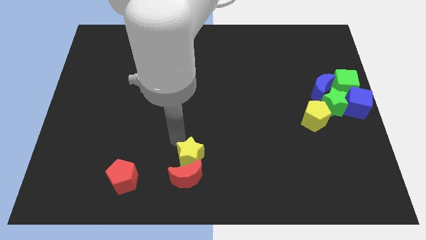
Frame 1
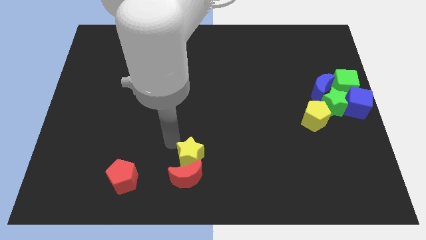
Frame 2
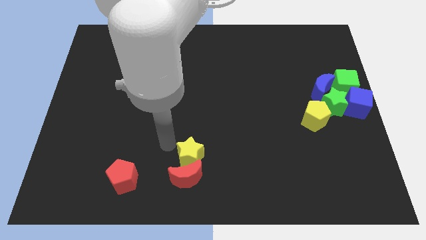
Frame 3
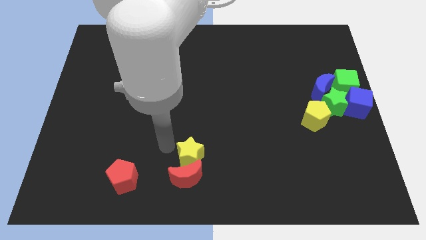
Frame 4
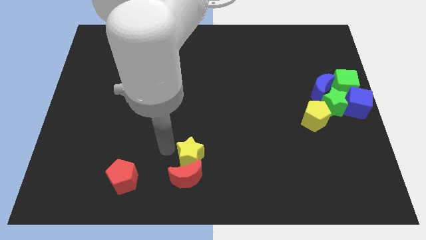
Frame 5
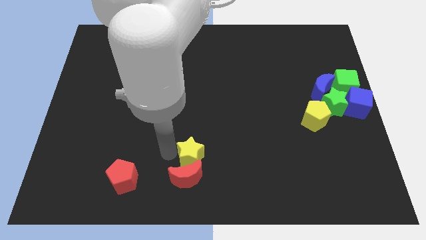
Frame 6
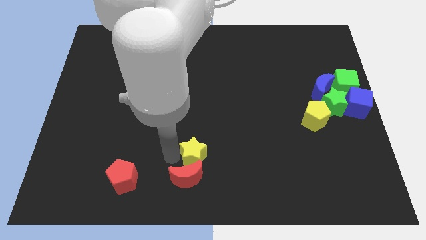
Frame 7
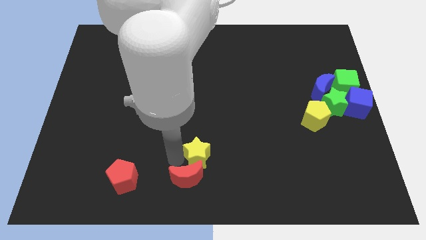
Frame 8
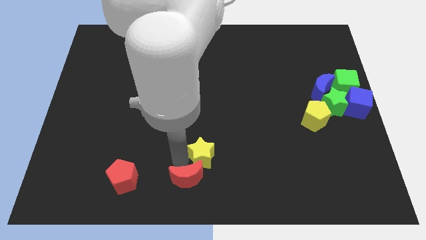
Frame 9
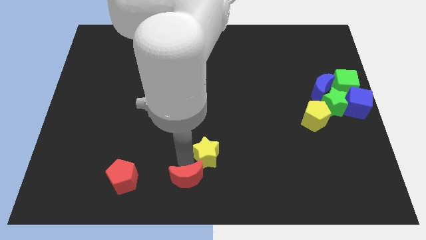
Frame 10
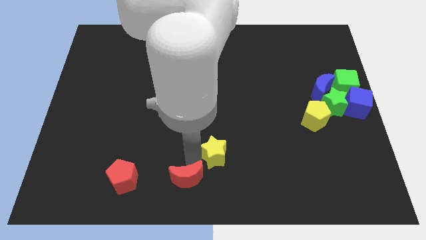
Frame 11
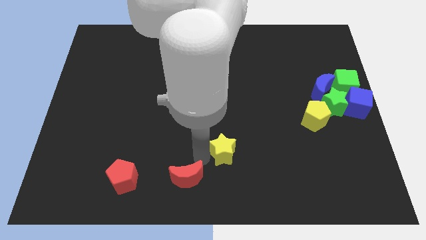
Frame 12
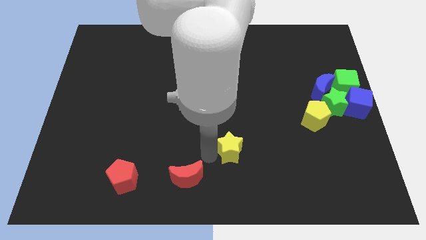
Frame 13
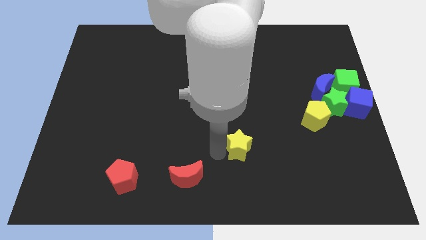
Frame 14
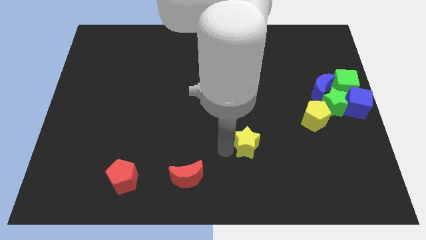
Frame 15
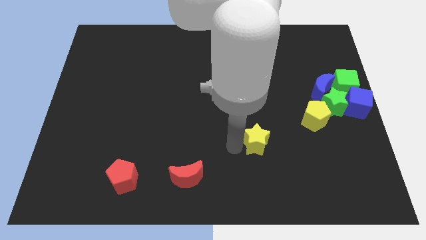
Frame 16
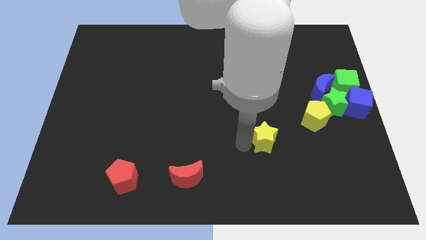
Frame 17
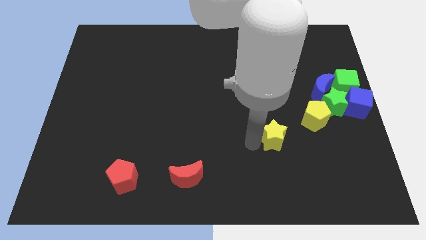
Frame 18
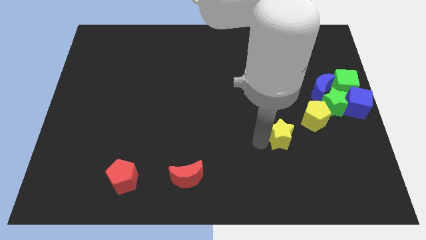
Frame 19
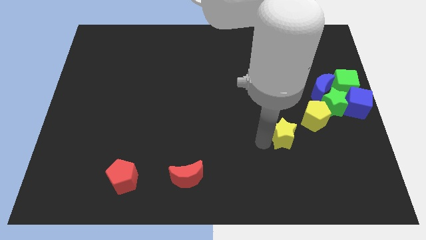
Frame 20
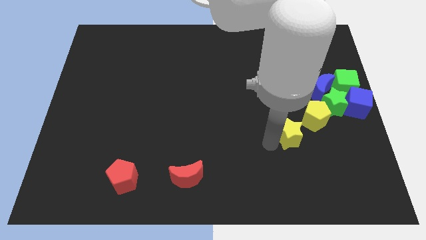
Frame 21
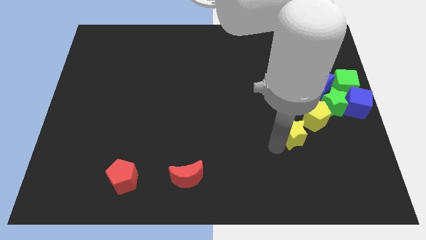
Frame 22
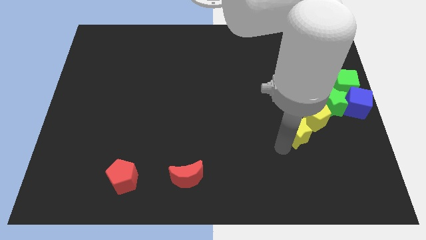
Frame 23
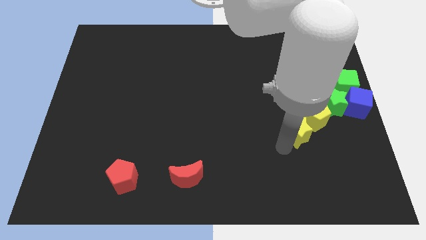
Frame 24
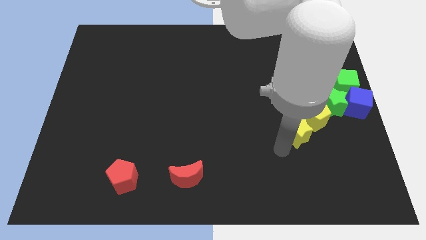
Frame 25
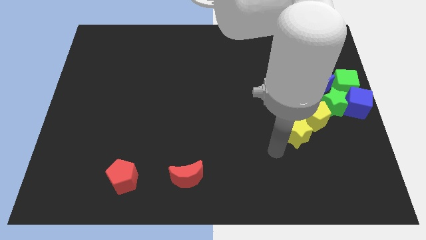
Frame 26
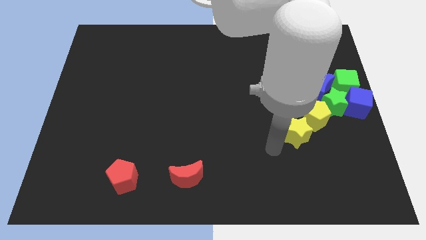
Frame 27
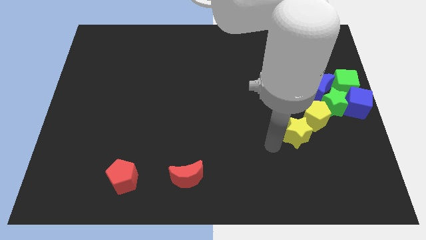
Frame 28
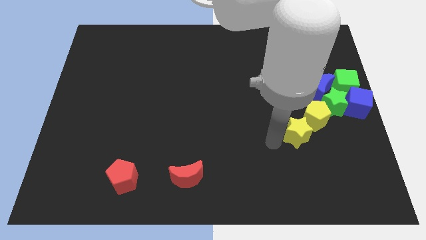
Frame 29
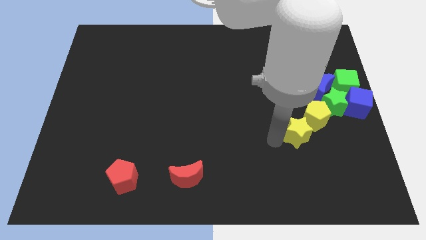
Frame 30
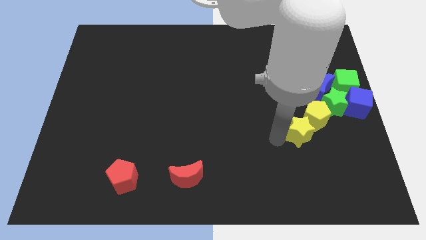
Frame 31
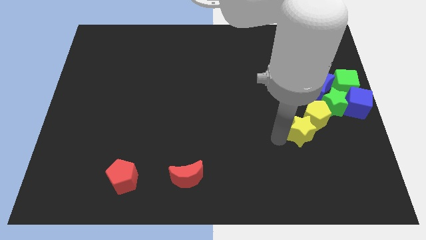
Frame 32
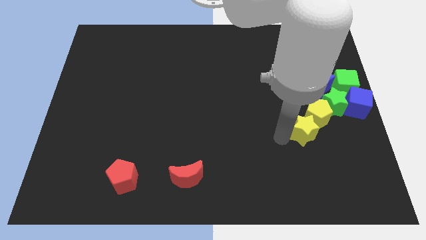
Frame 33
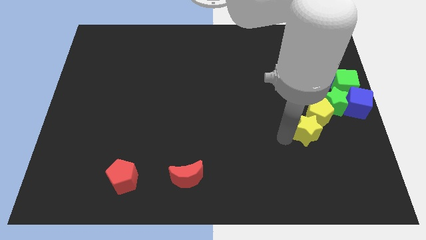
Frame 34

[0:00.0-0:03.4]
move the yellow star to the bottom left side of the yellow pentagon

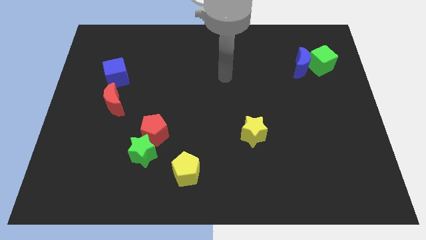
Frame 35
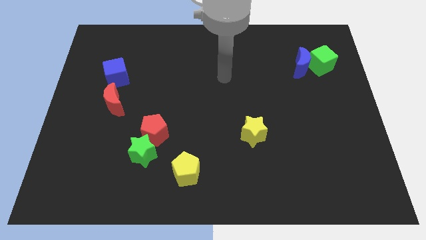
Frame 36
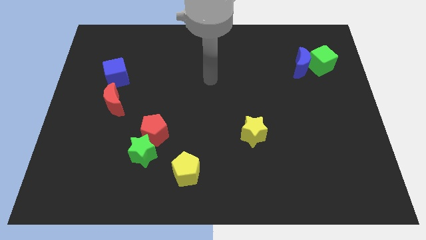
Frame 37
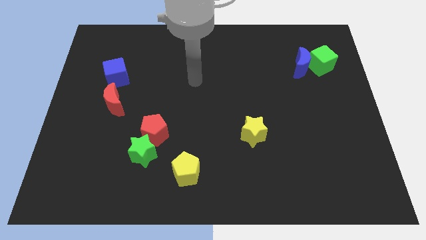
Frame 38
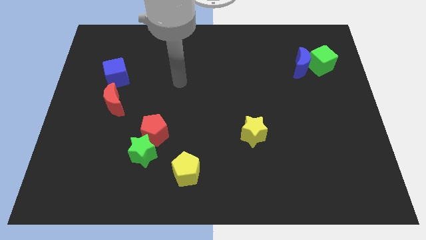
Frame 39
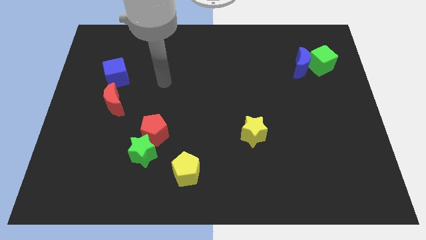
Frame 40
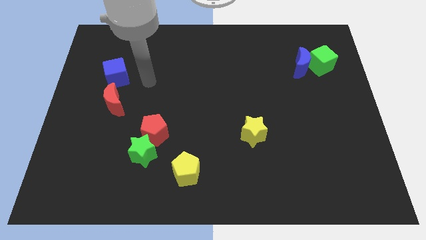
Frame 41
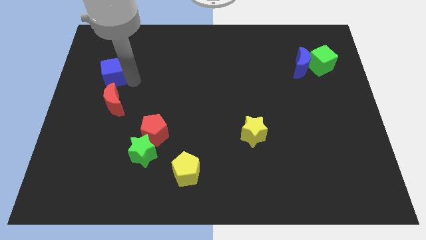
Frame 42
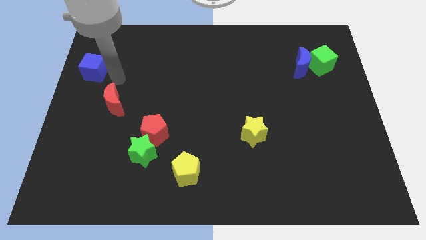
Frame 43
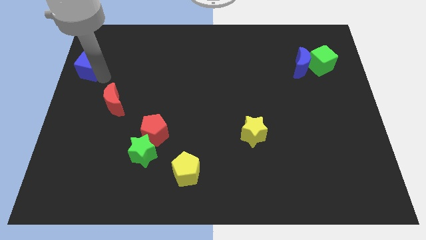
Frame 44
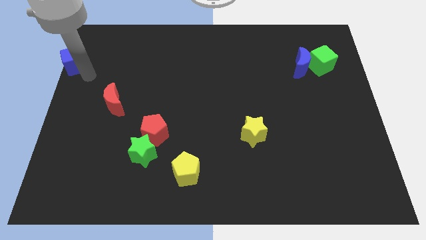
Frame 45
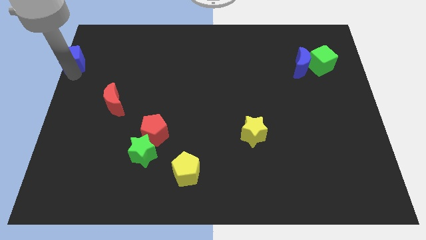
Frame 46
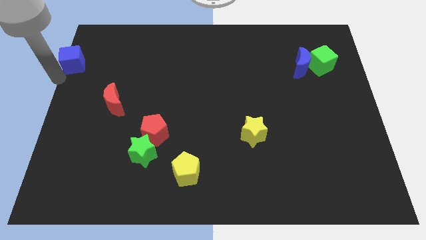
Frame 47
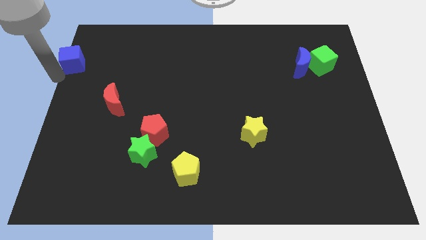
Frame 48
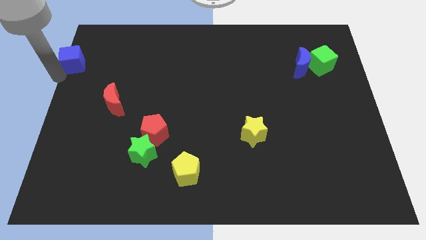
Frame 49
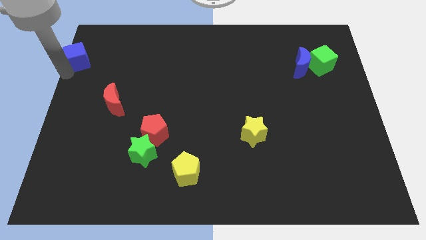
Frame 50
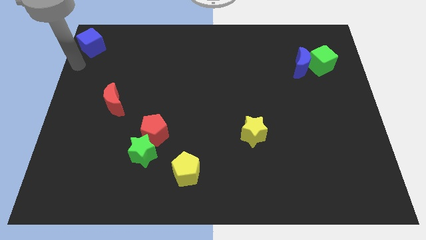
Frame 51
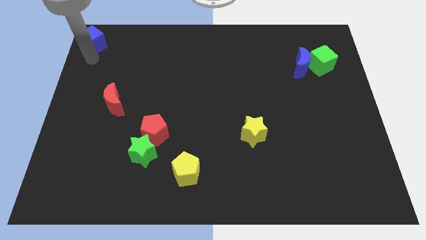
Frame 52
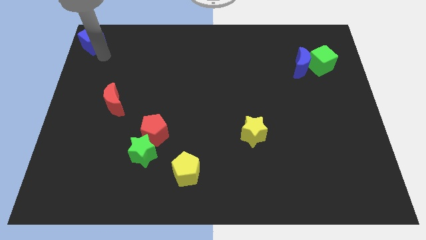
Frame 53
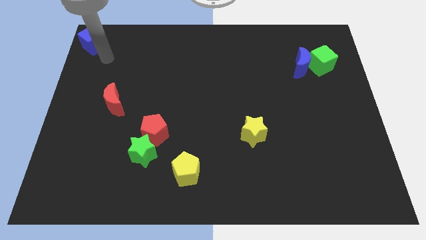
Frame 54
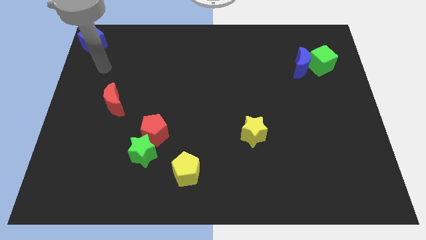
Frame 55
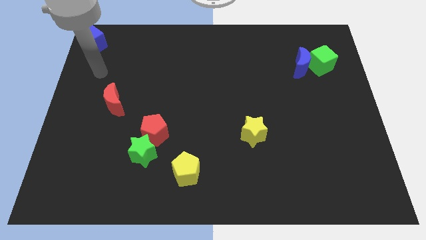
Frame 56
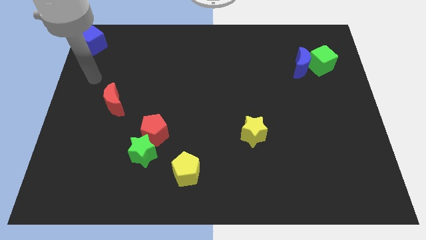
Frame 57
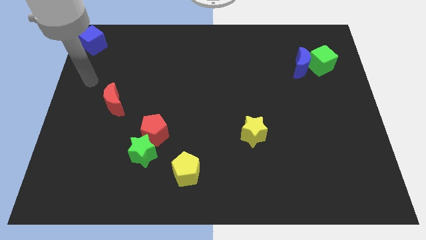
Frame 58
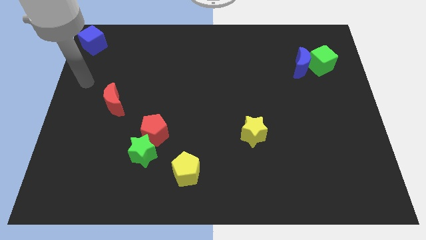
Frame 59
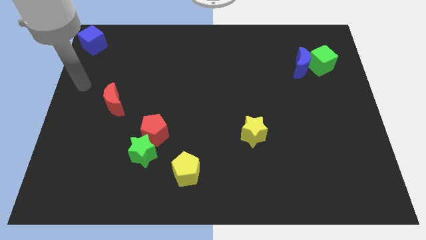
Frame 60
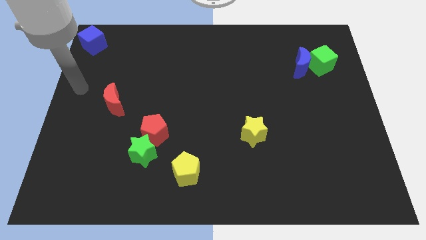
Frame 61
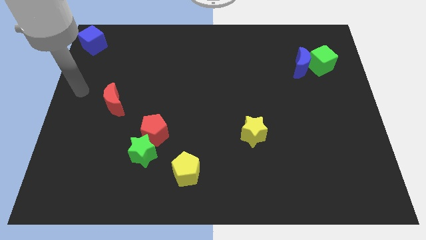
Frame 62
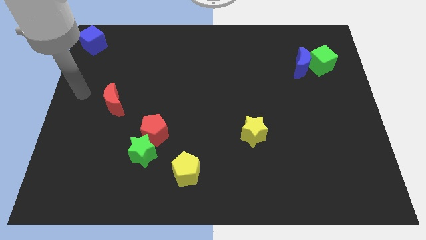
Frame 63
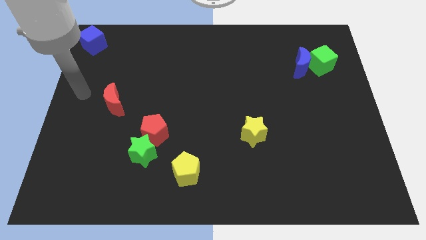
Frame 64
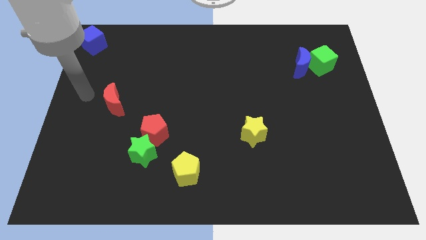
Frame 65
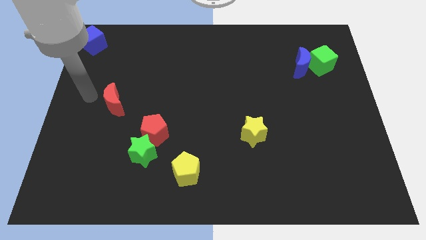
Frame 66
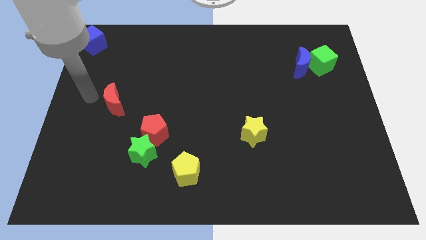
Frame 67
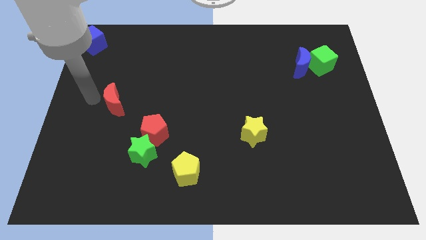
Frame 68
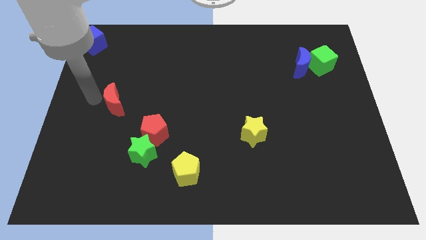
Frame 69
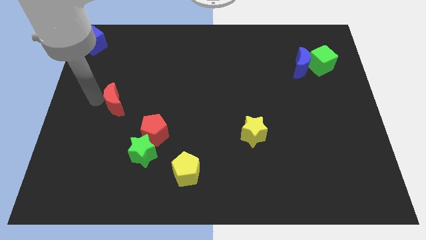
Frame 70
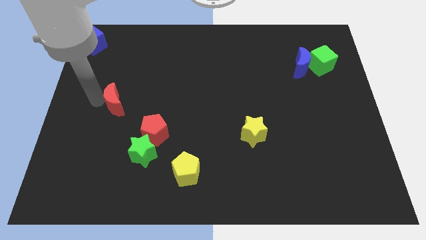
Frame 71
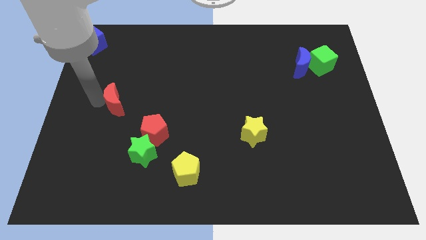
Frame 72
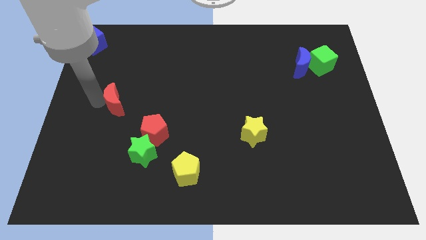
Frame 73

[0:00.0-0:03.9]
push blue cube towards left top end

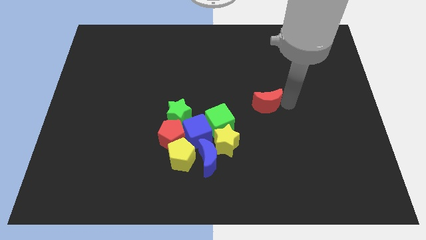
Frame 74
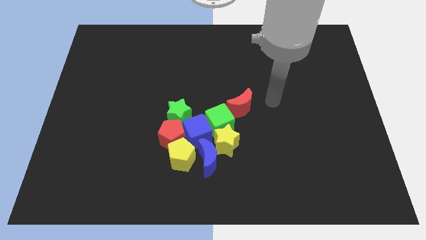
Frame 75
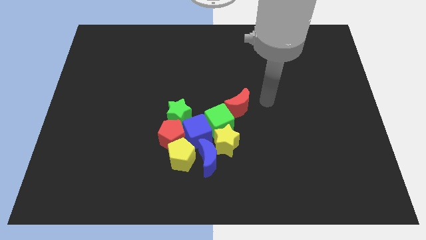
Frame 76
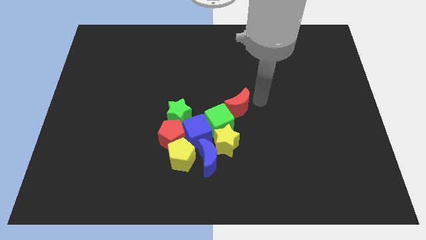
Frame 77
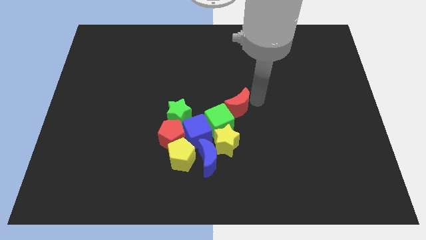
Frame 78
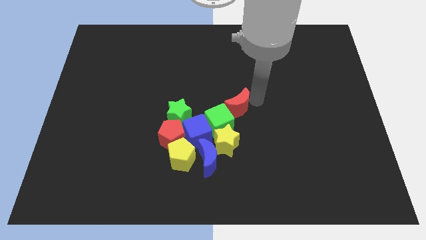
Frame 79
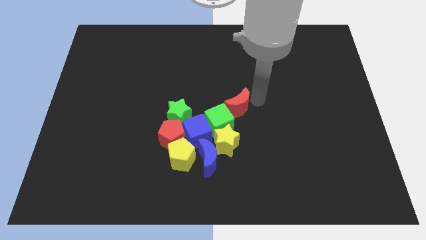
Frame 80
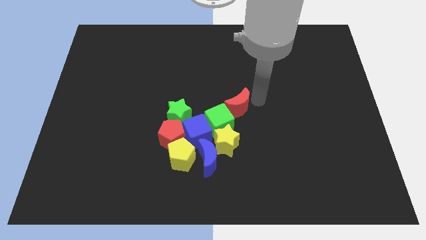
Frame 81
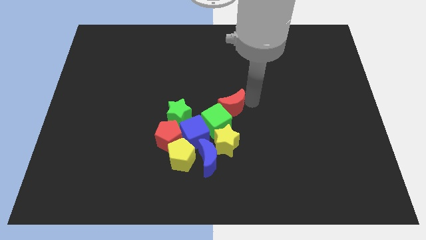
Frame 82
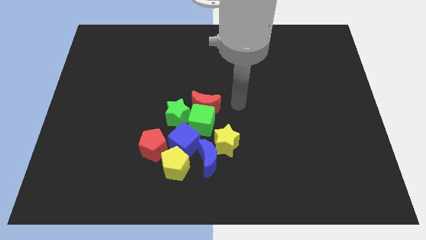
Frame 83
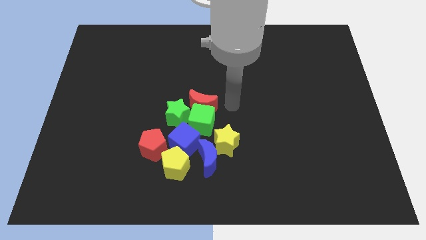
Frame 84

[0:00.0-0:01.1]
move the red moon close to the green cube

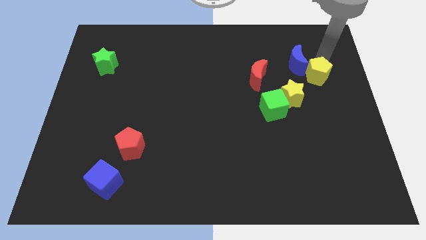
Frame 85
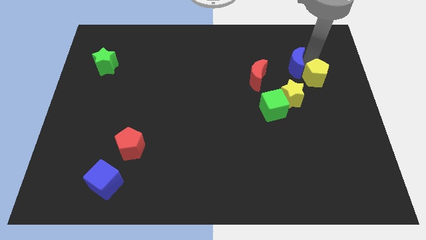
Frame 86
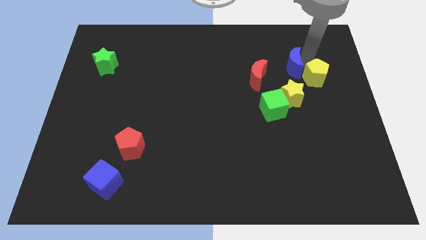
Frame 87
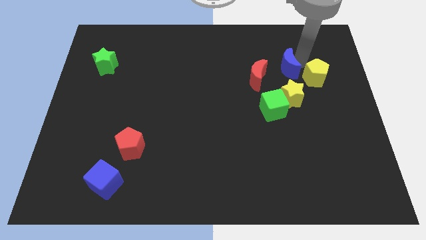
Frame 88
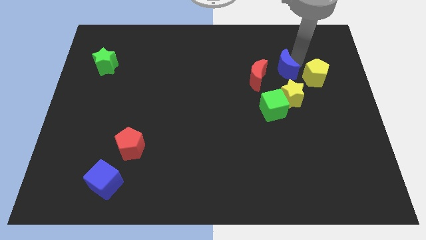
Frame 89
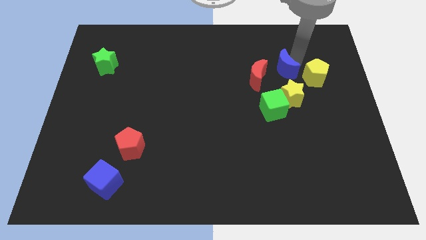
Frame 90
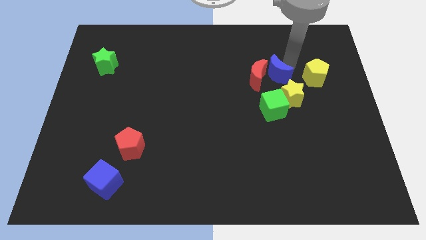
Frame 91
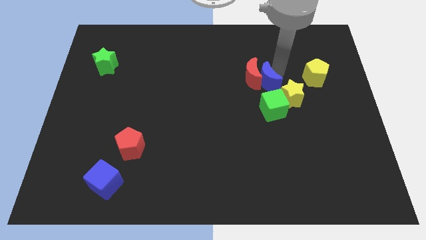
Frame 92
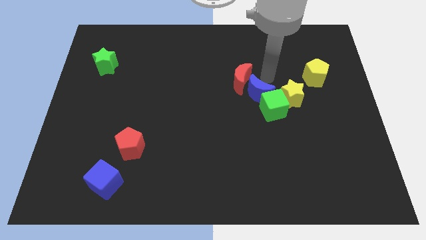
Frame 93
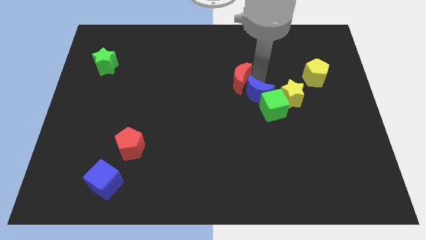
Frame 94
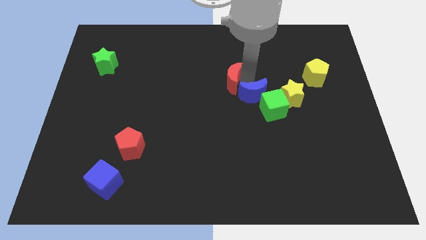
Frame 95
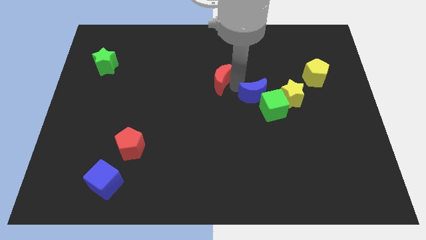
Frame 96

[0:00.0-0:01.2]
move blue moon to the top left of green cube
